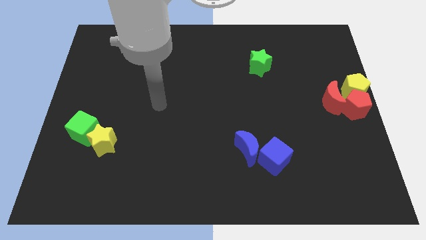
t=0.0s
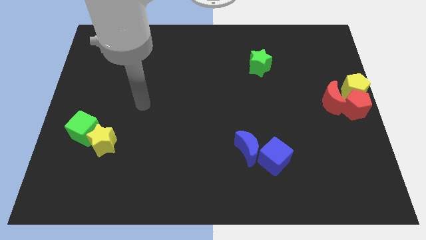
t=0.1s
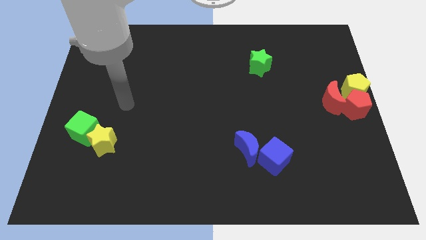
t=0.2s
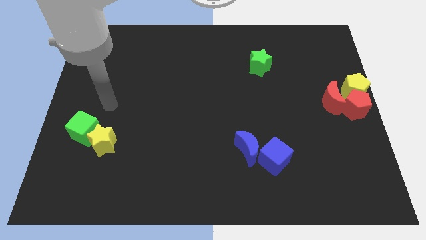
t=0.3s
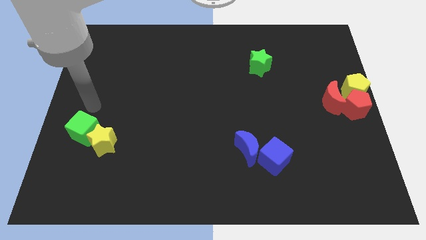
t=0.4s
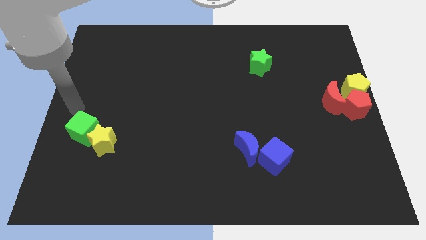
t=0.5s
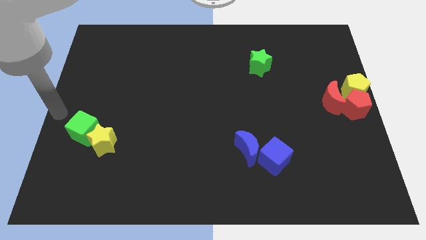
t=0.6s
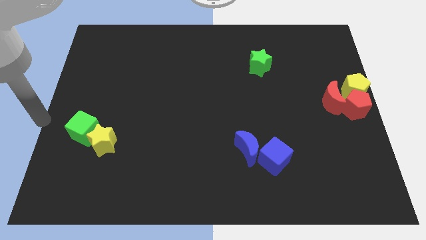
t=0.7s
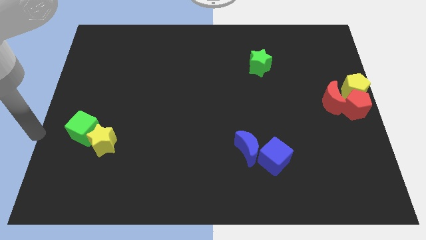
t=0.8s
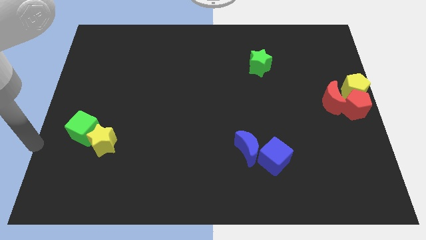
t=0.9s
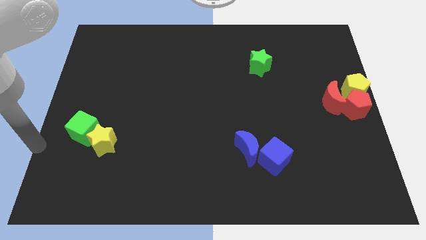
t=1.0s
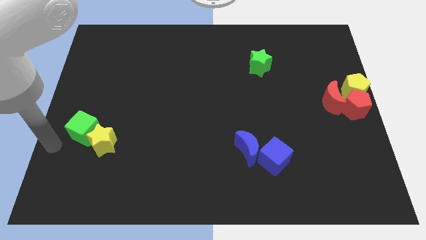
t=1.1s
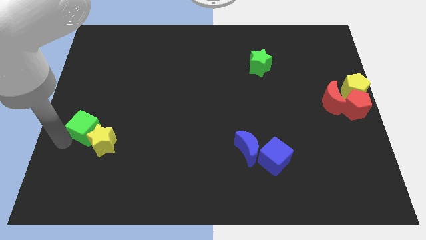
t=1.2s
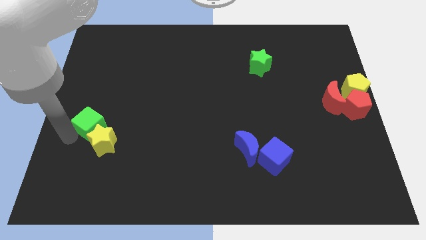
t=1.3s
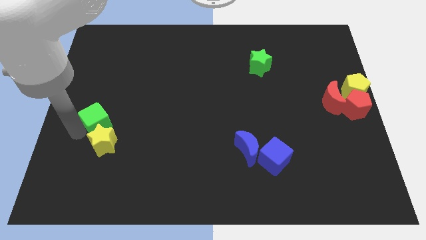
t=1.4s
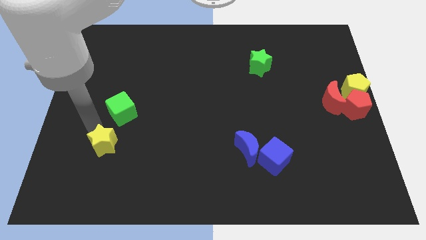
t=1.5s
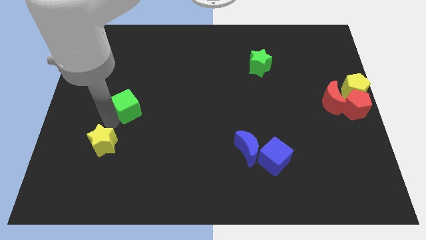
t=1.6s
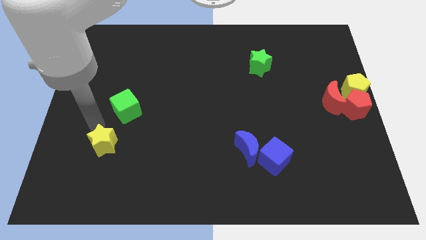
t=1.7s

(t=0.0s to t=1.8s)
separate the green cube from the yellow star

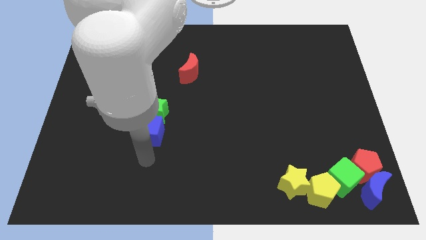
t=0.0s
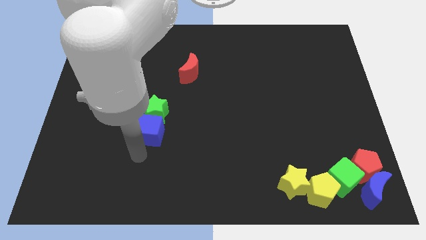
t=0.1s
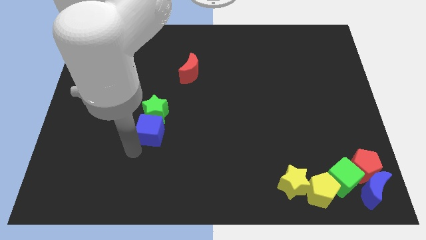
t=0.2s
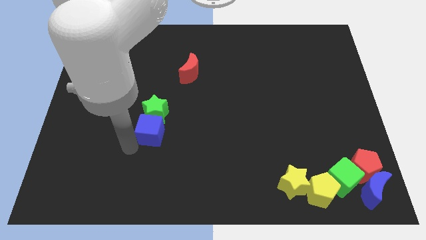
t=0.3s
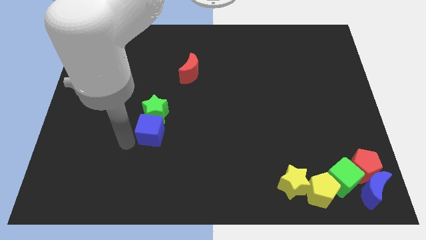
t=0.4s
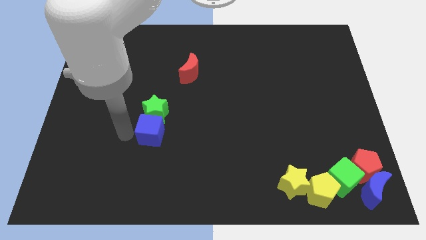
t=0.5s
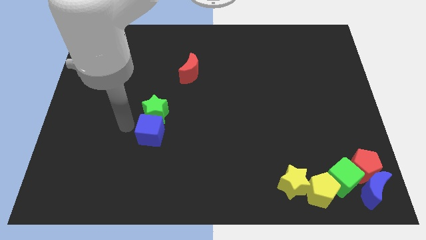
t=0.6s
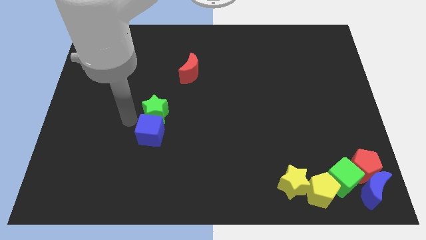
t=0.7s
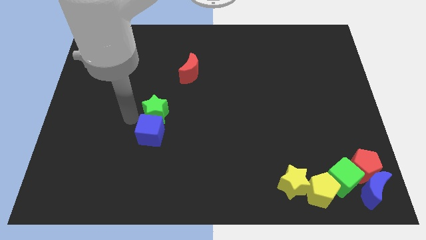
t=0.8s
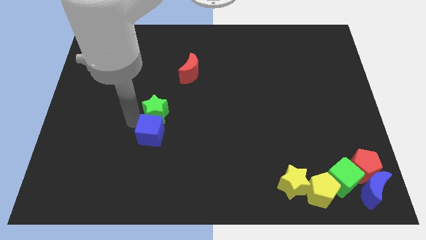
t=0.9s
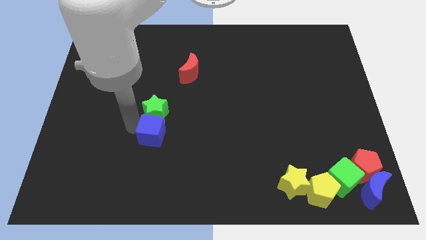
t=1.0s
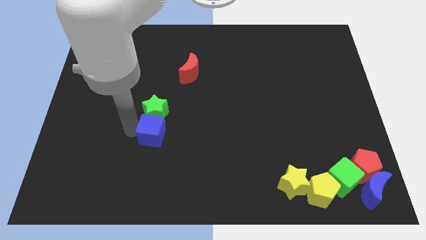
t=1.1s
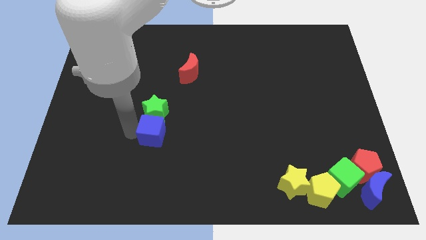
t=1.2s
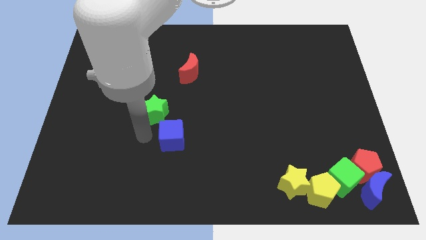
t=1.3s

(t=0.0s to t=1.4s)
move the arm to the left of blue cube

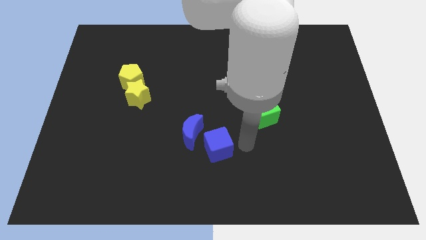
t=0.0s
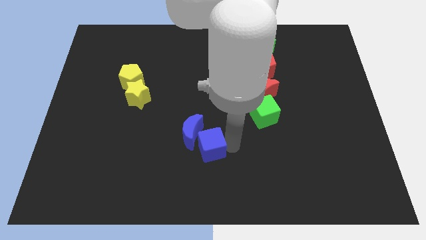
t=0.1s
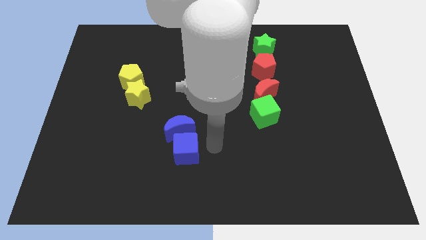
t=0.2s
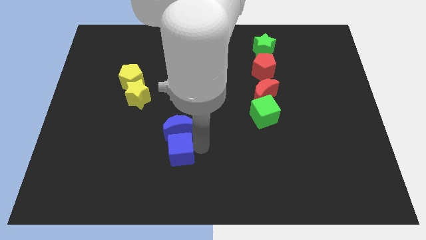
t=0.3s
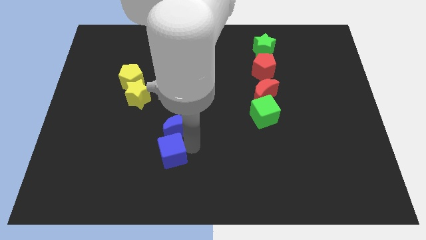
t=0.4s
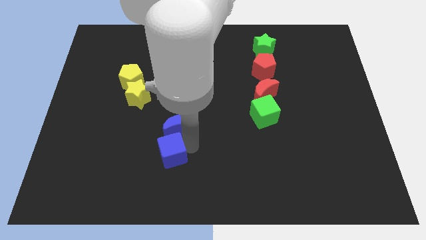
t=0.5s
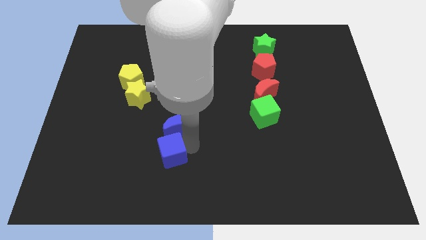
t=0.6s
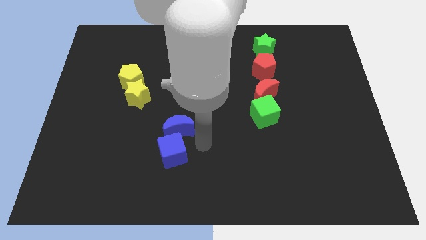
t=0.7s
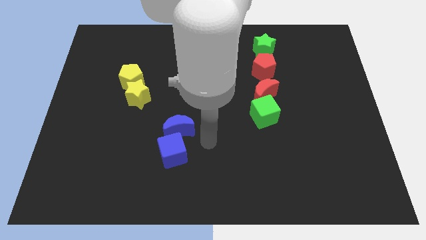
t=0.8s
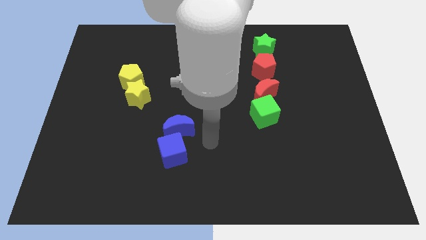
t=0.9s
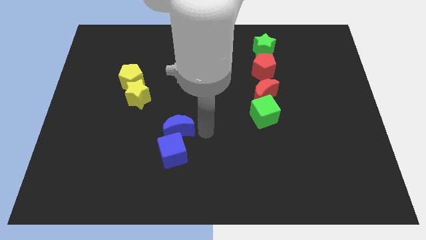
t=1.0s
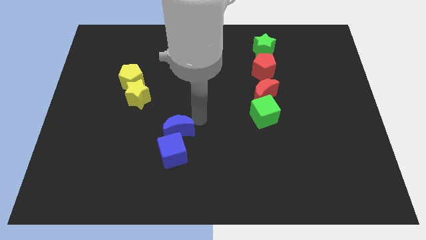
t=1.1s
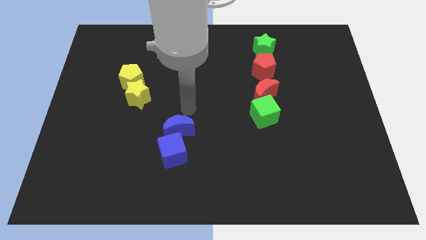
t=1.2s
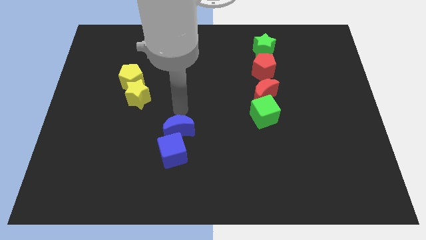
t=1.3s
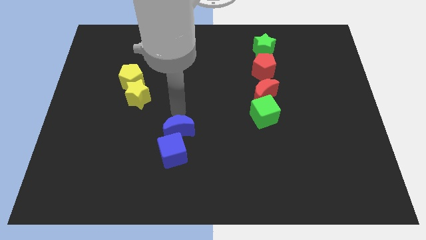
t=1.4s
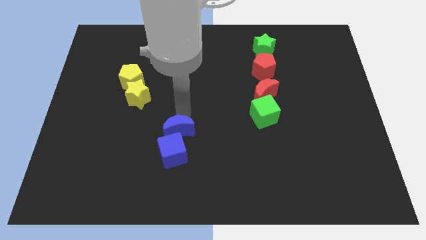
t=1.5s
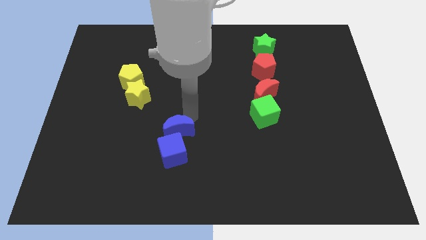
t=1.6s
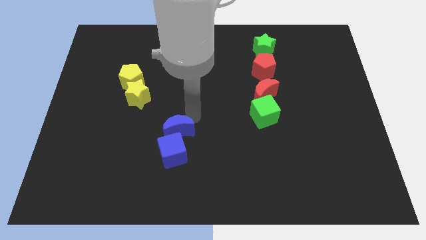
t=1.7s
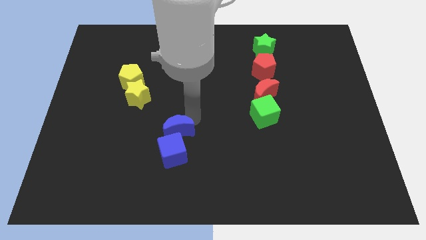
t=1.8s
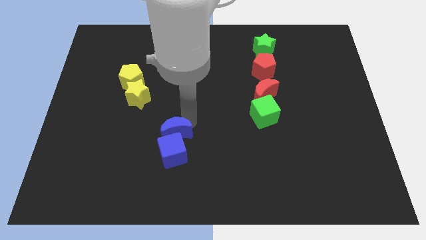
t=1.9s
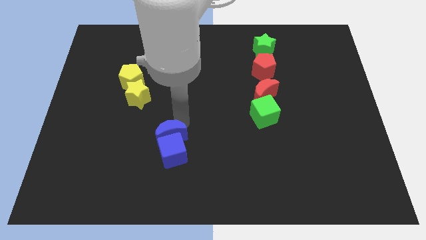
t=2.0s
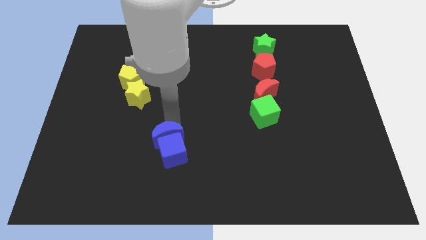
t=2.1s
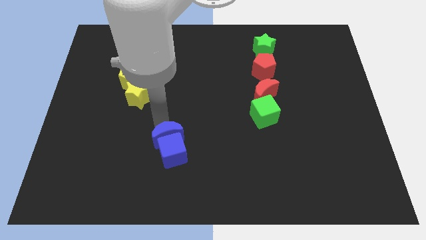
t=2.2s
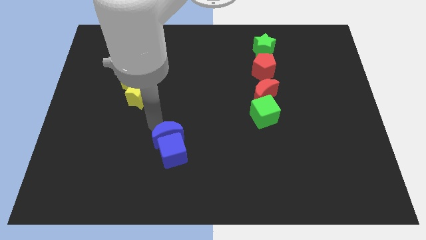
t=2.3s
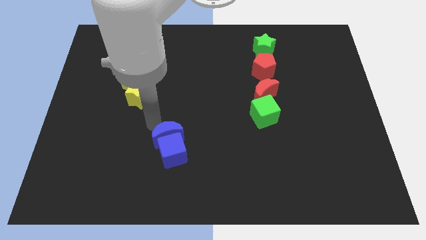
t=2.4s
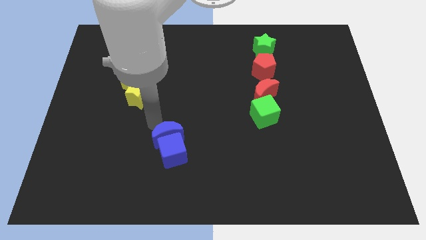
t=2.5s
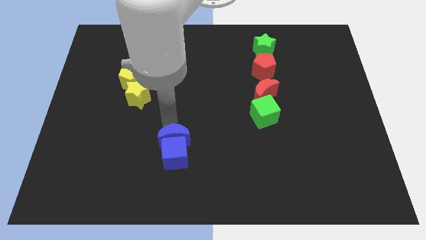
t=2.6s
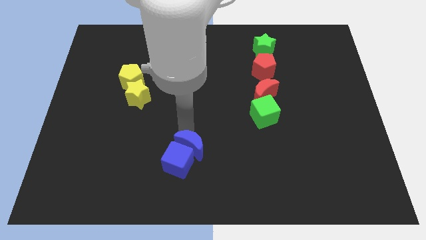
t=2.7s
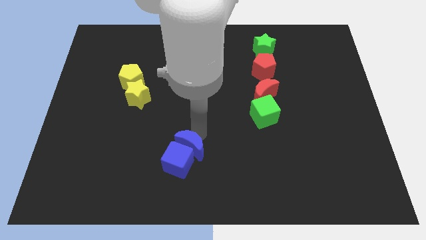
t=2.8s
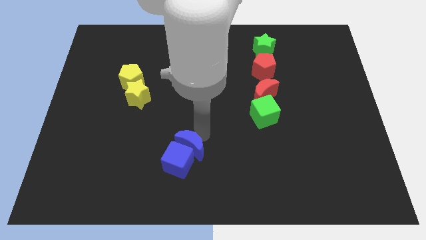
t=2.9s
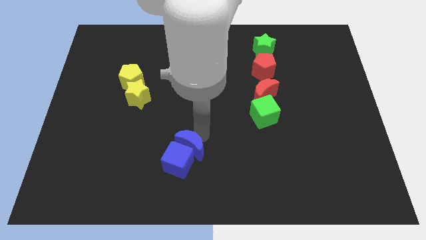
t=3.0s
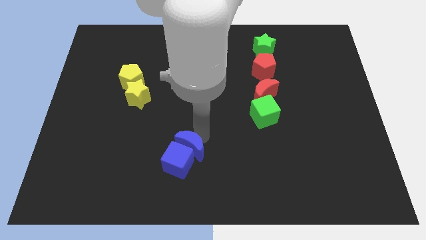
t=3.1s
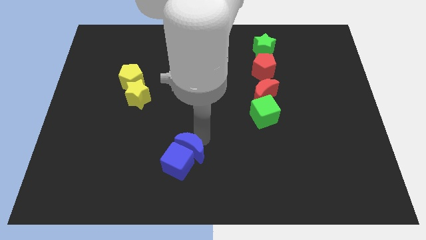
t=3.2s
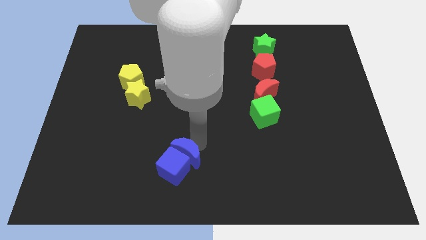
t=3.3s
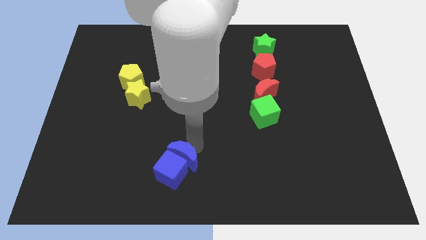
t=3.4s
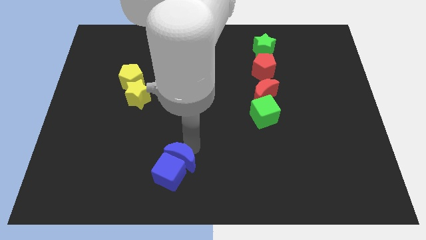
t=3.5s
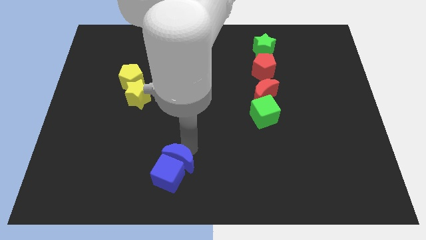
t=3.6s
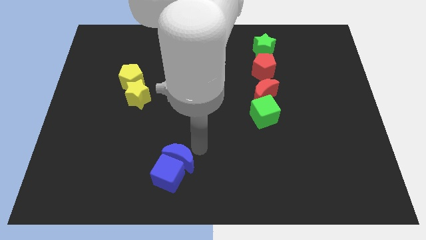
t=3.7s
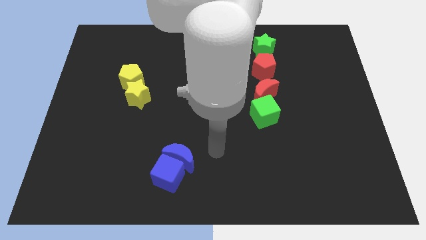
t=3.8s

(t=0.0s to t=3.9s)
place the blue blocks diagonal to yellow blocks

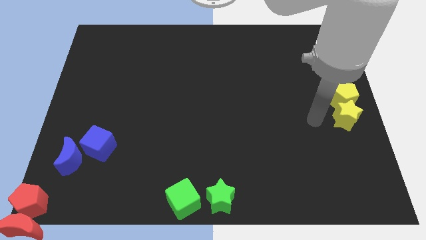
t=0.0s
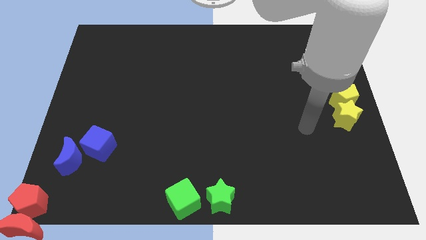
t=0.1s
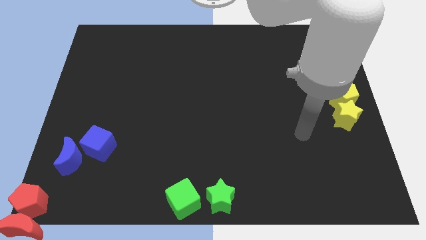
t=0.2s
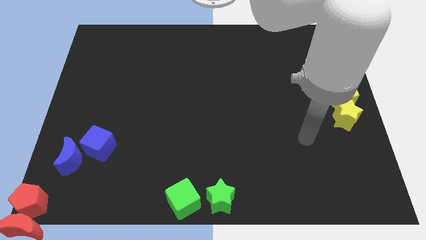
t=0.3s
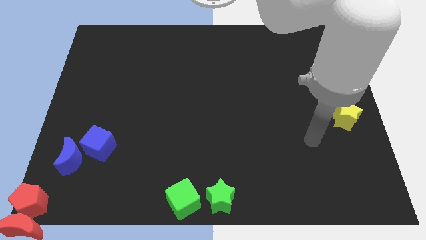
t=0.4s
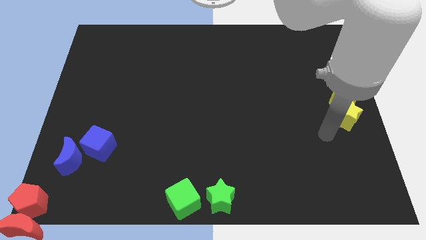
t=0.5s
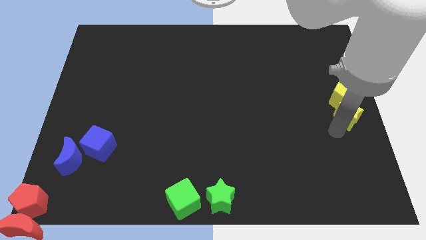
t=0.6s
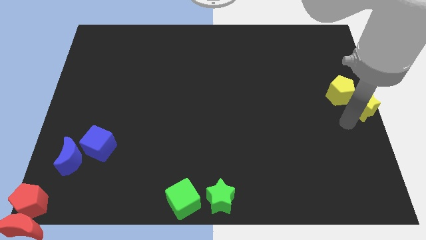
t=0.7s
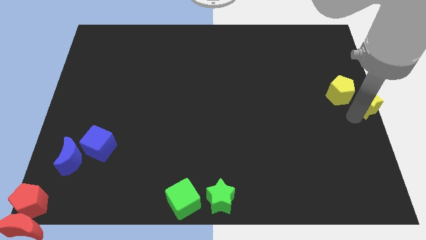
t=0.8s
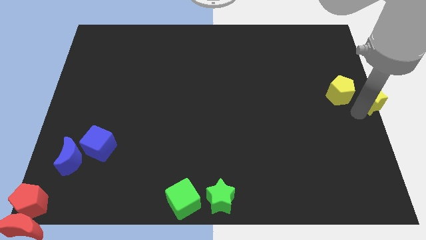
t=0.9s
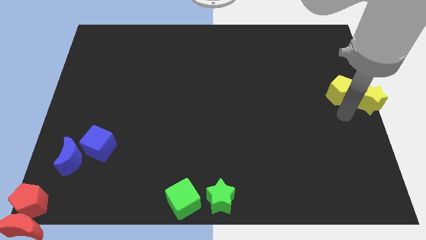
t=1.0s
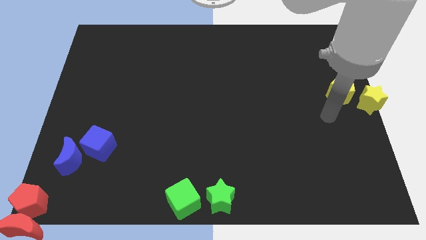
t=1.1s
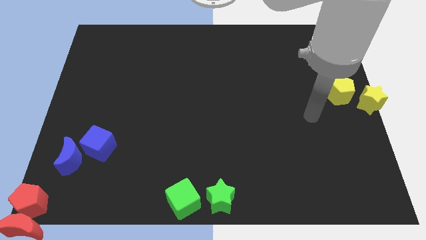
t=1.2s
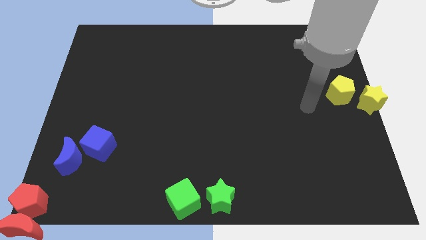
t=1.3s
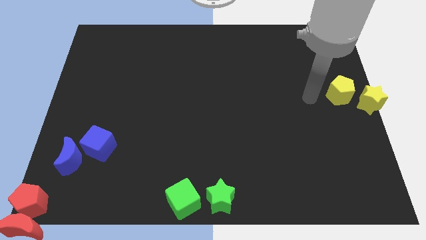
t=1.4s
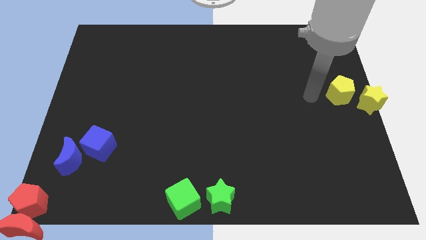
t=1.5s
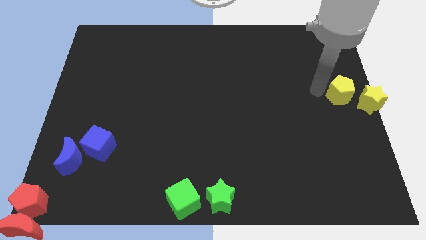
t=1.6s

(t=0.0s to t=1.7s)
slide the yellow star to the center right of the board

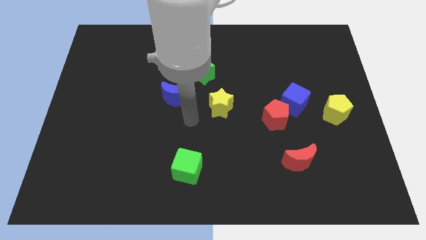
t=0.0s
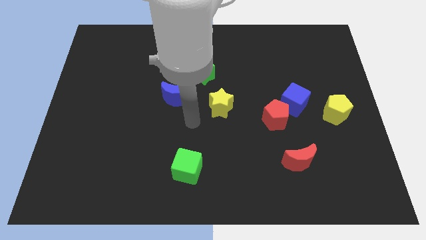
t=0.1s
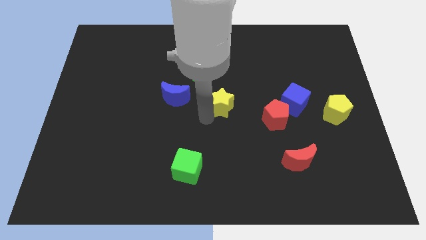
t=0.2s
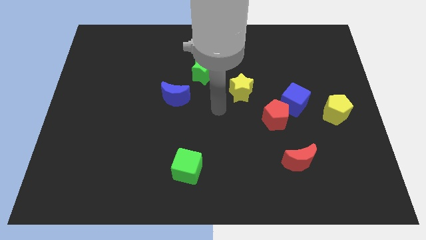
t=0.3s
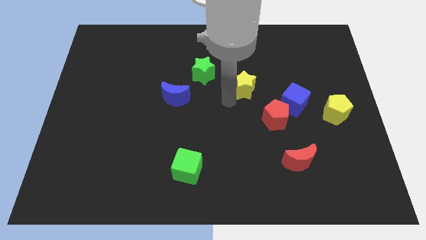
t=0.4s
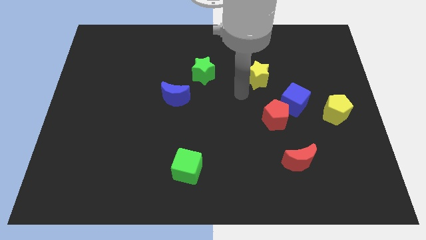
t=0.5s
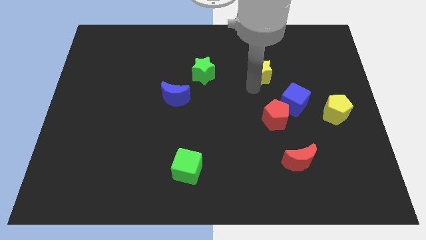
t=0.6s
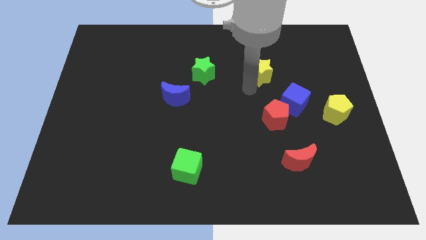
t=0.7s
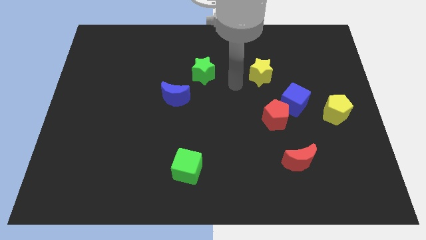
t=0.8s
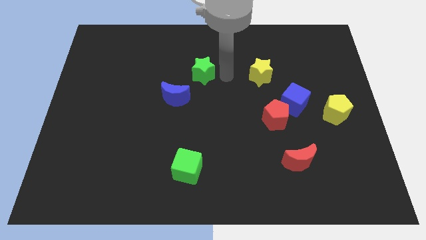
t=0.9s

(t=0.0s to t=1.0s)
push the yellow star to the right of the green star
